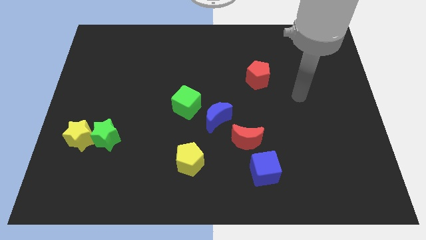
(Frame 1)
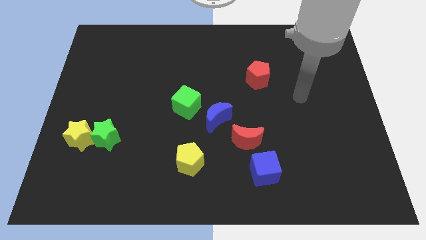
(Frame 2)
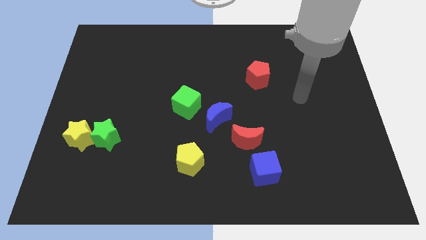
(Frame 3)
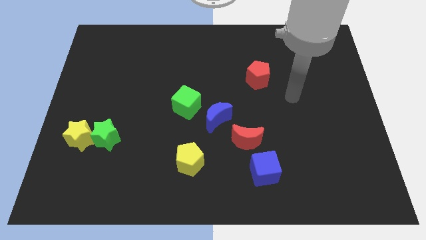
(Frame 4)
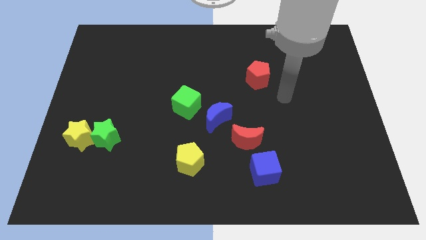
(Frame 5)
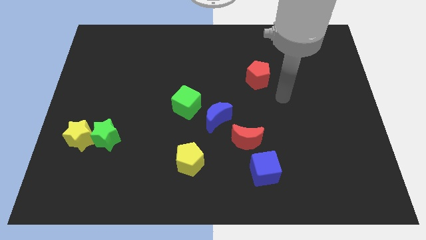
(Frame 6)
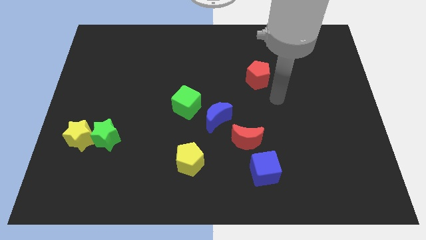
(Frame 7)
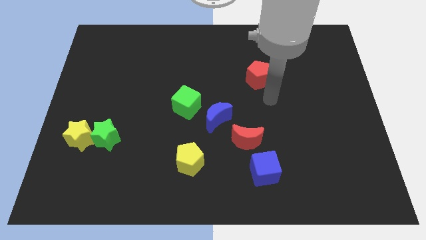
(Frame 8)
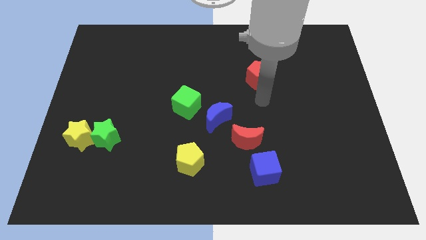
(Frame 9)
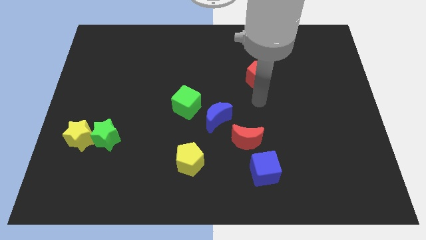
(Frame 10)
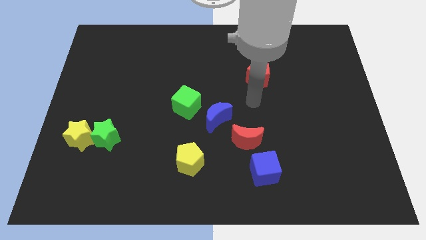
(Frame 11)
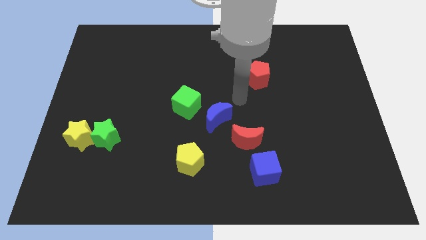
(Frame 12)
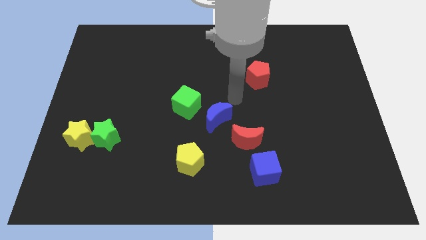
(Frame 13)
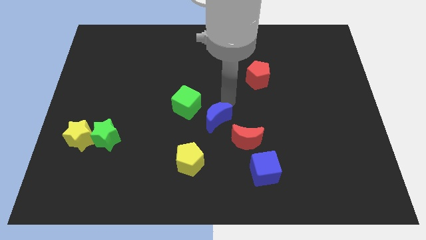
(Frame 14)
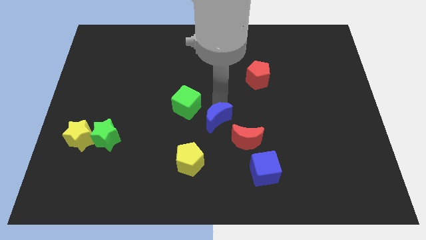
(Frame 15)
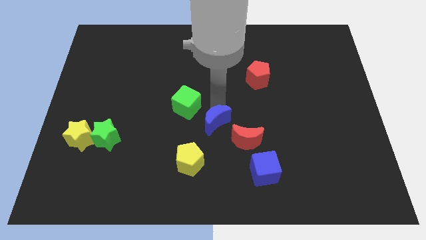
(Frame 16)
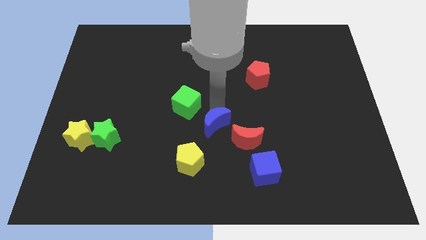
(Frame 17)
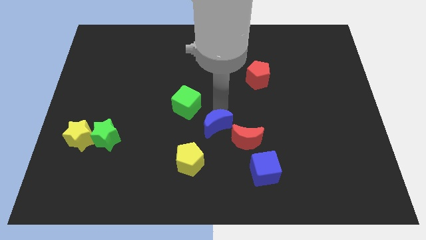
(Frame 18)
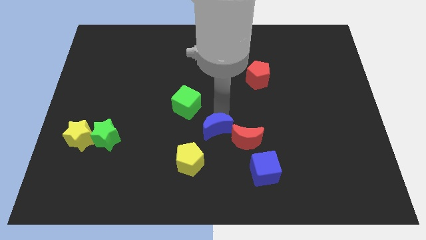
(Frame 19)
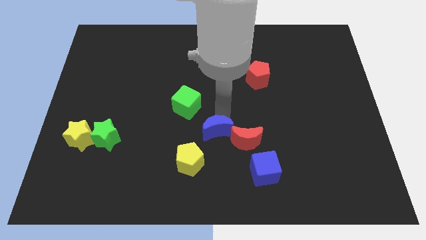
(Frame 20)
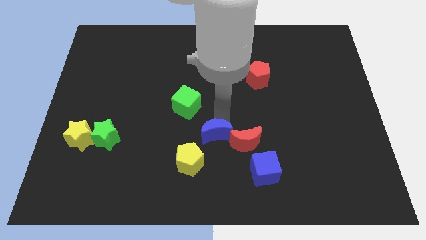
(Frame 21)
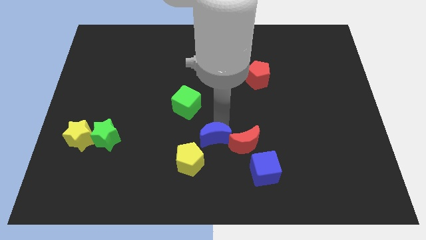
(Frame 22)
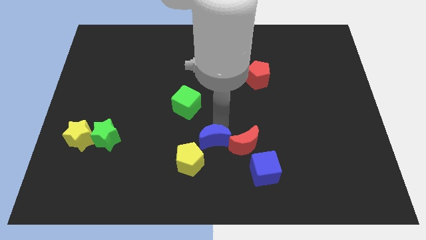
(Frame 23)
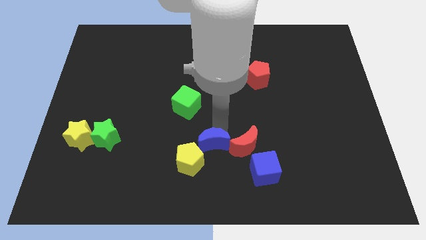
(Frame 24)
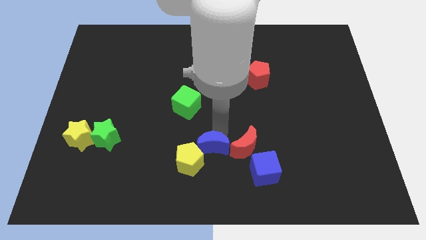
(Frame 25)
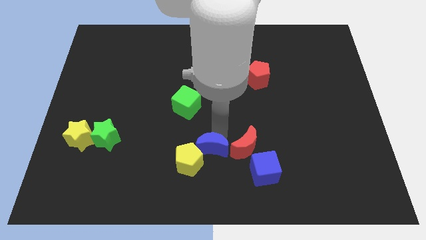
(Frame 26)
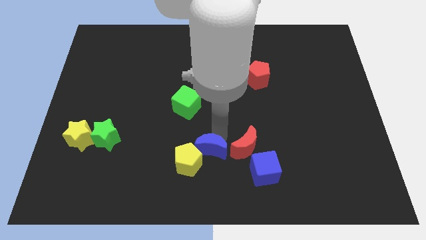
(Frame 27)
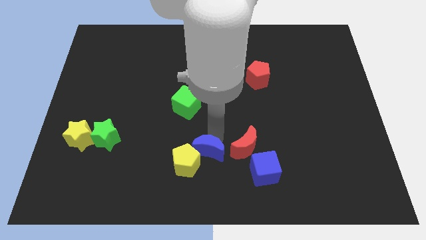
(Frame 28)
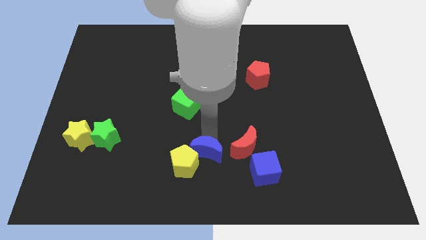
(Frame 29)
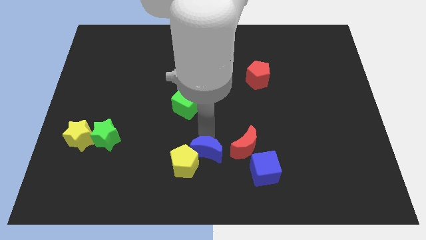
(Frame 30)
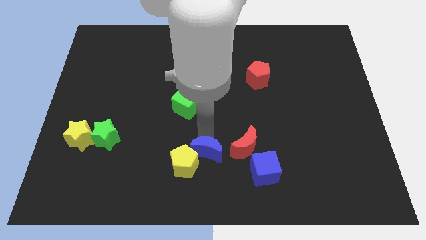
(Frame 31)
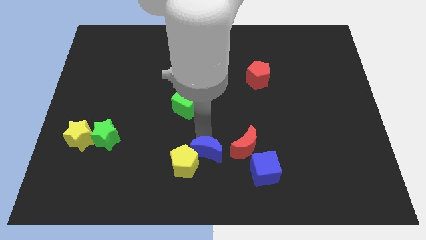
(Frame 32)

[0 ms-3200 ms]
push the blue moon into the yellow pentagon

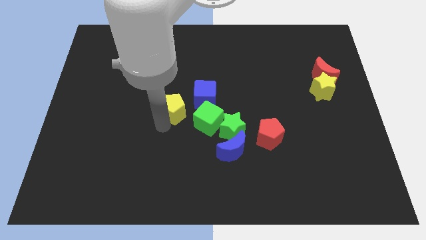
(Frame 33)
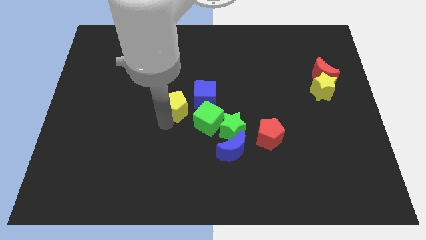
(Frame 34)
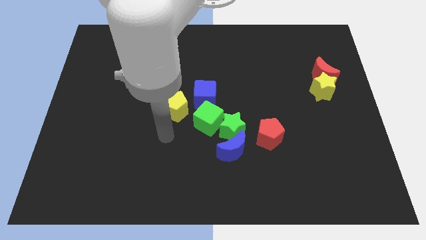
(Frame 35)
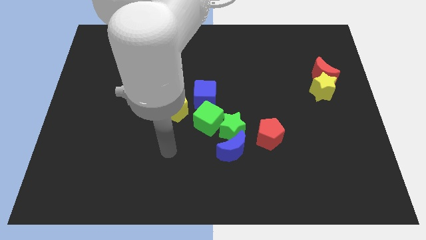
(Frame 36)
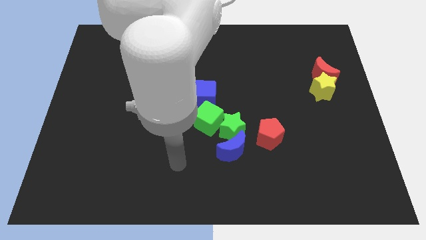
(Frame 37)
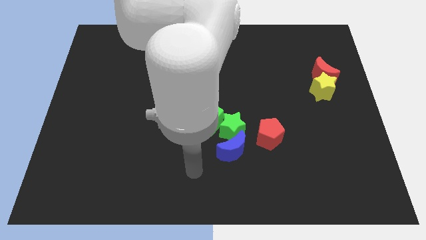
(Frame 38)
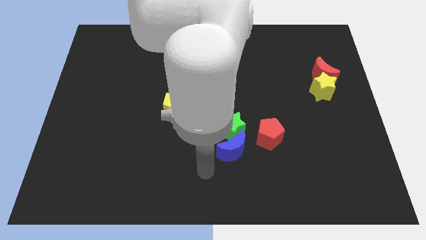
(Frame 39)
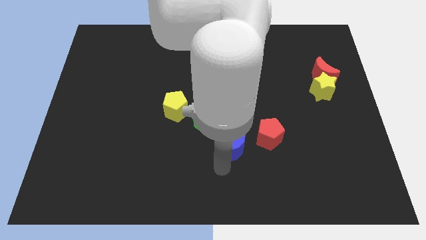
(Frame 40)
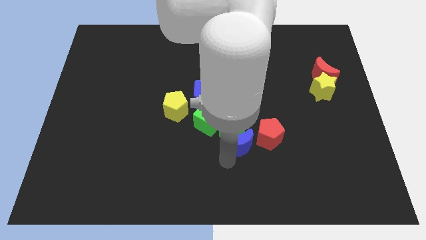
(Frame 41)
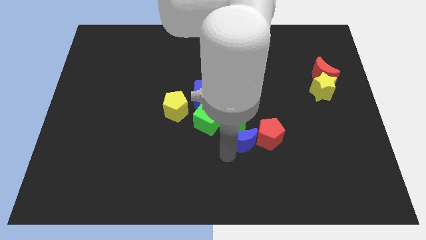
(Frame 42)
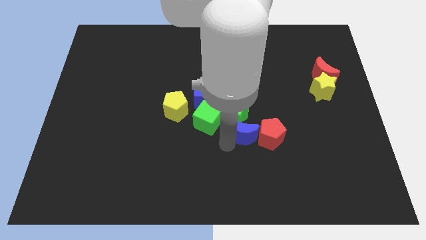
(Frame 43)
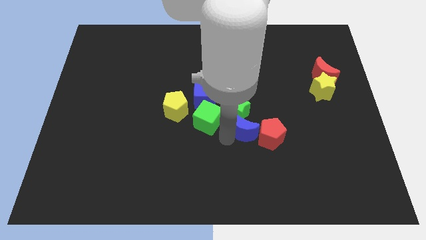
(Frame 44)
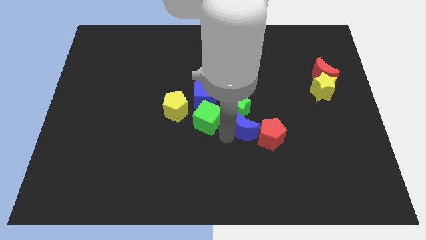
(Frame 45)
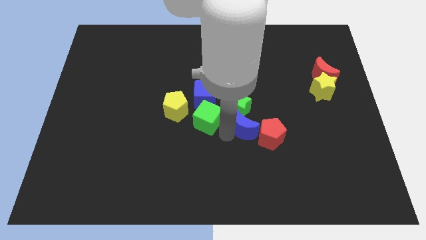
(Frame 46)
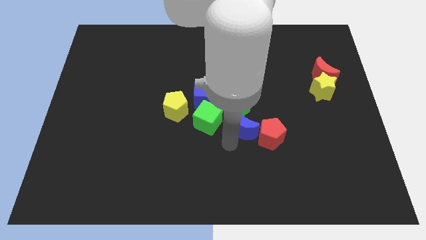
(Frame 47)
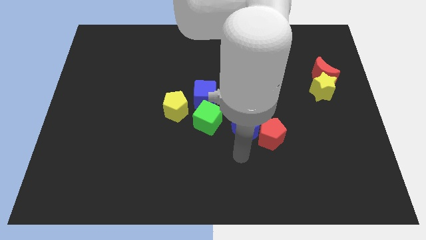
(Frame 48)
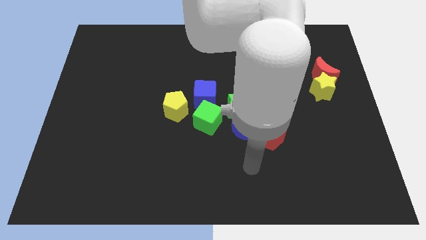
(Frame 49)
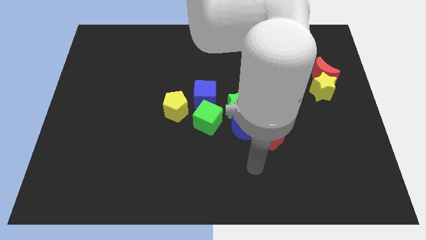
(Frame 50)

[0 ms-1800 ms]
push the blue moon into green star

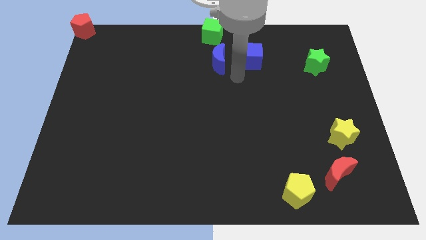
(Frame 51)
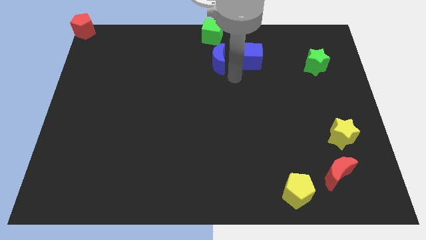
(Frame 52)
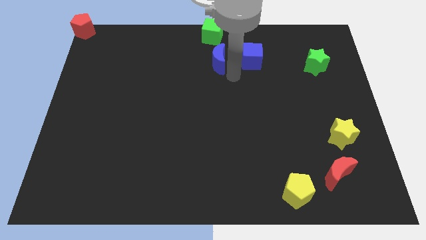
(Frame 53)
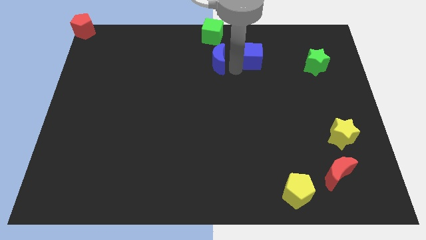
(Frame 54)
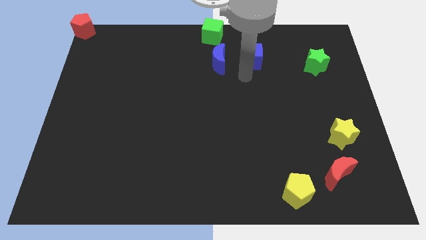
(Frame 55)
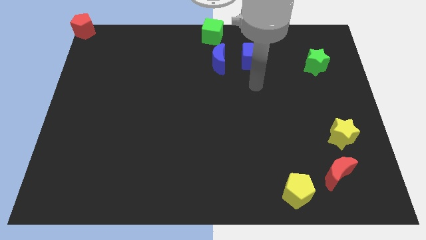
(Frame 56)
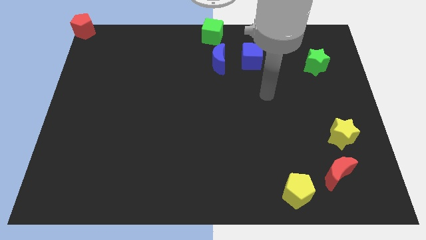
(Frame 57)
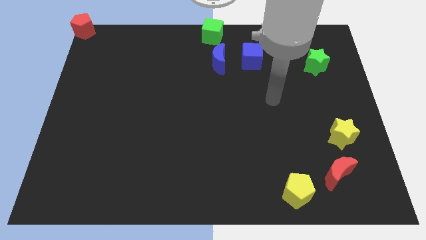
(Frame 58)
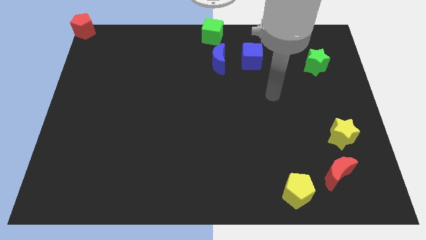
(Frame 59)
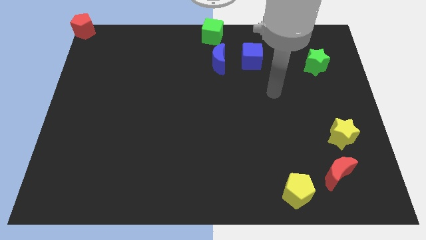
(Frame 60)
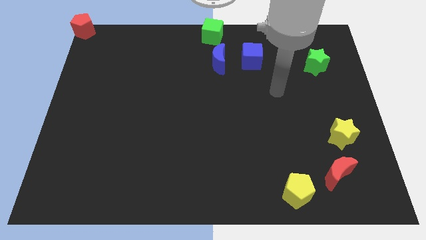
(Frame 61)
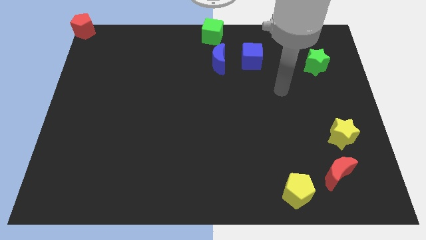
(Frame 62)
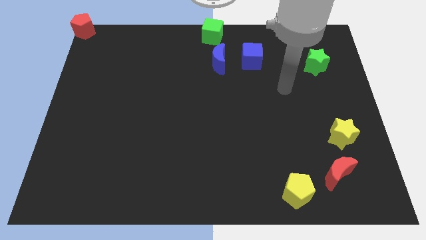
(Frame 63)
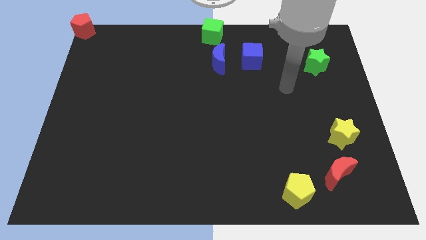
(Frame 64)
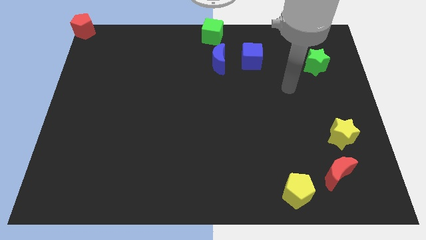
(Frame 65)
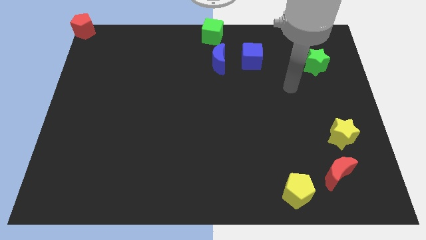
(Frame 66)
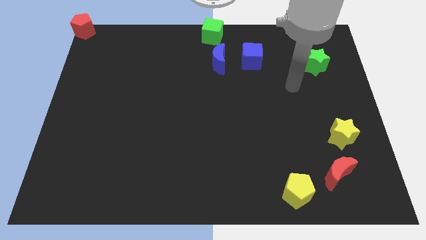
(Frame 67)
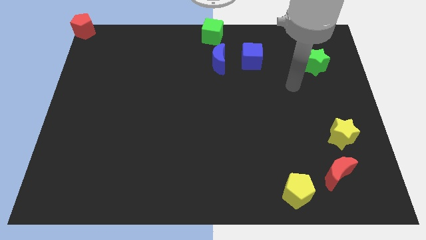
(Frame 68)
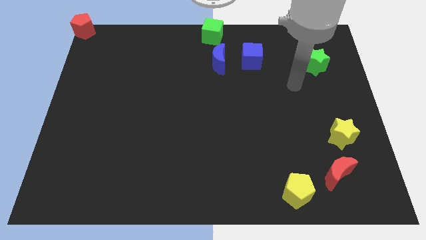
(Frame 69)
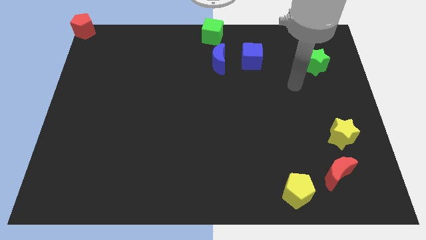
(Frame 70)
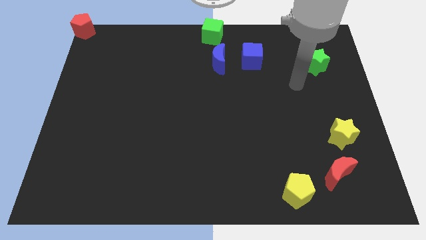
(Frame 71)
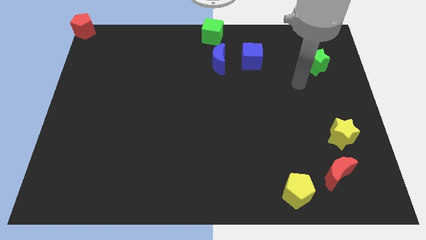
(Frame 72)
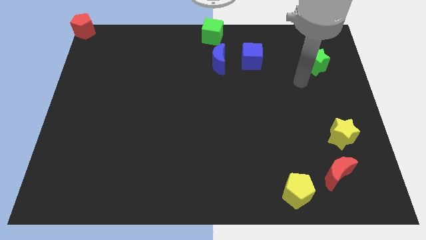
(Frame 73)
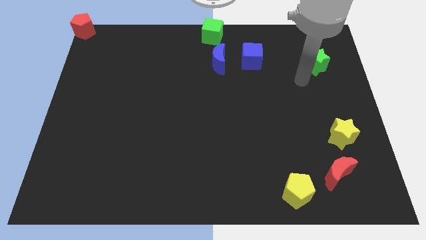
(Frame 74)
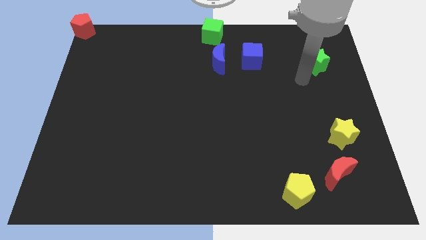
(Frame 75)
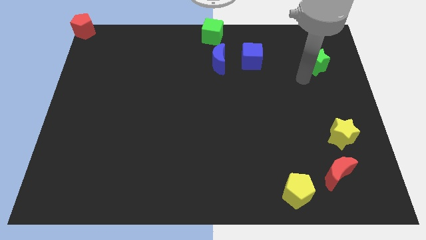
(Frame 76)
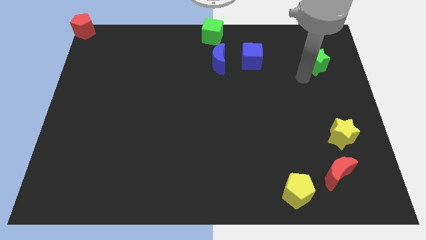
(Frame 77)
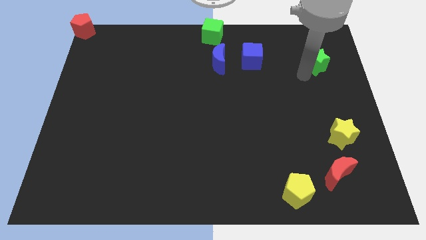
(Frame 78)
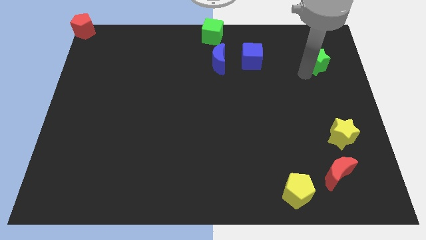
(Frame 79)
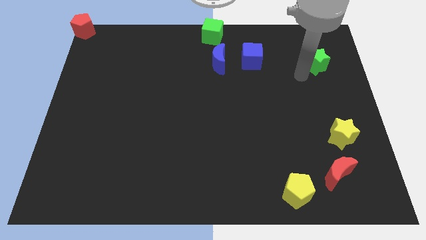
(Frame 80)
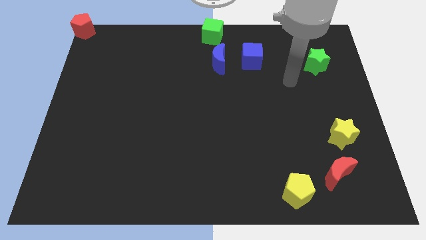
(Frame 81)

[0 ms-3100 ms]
point your arm to the left of the green star

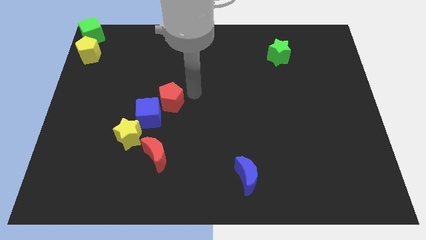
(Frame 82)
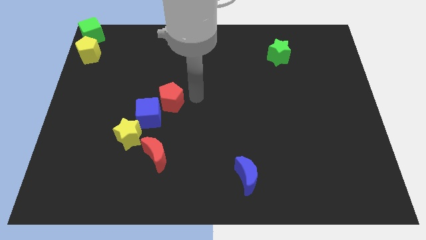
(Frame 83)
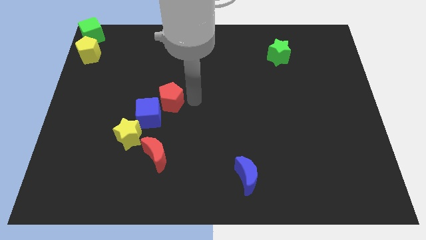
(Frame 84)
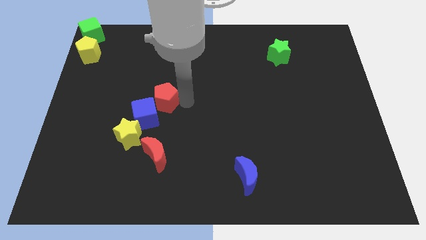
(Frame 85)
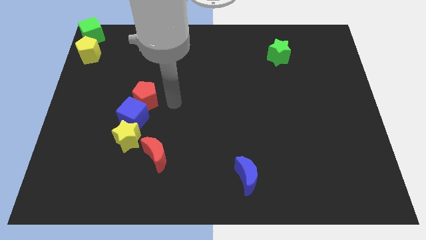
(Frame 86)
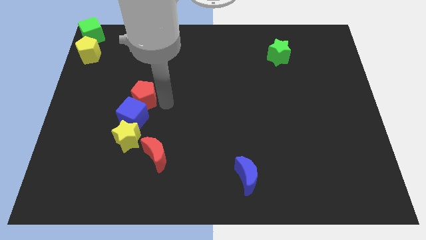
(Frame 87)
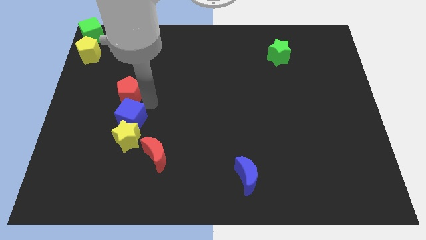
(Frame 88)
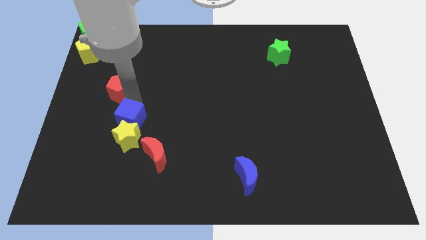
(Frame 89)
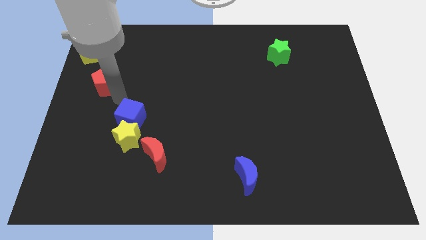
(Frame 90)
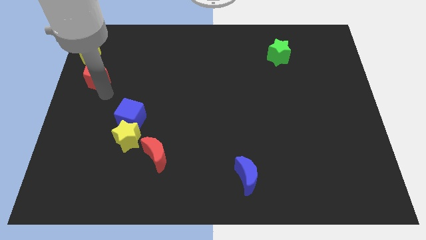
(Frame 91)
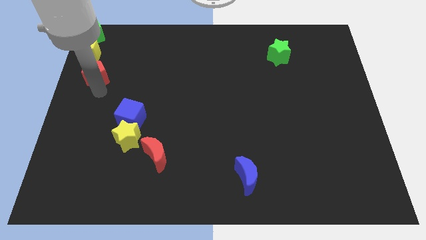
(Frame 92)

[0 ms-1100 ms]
move the red pentagon away from the blue cube
